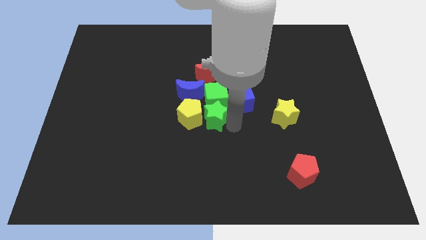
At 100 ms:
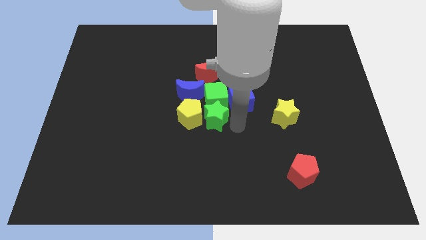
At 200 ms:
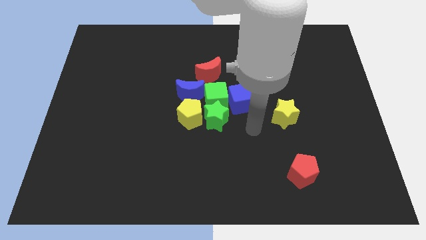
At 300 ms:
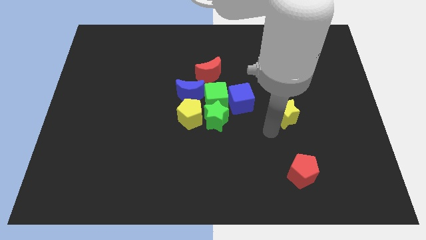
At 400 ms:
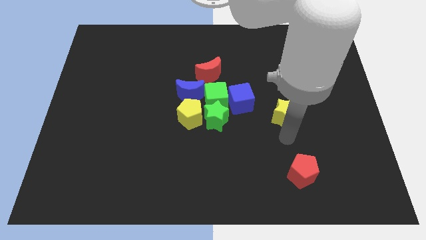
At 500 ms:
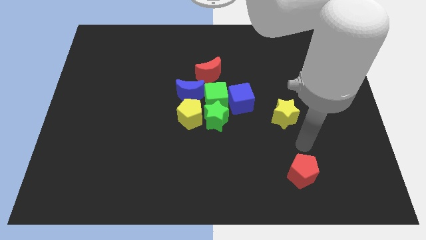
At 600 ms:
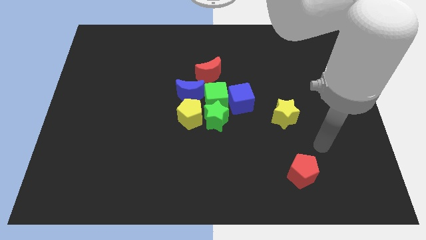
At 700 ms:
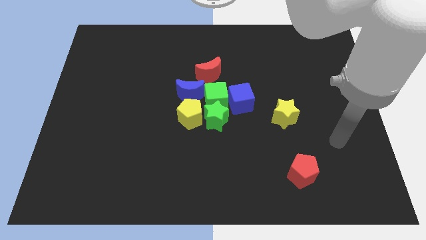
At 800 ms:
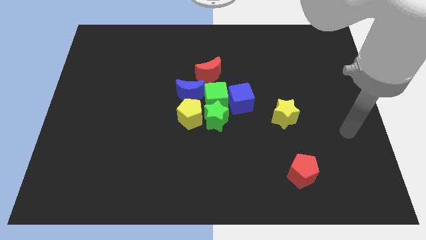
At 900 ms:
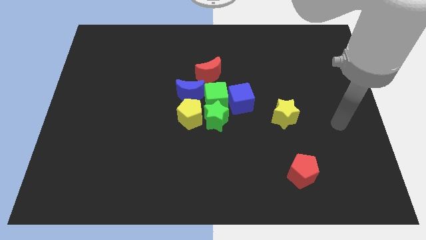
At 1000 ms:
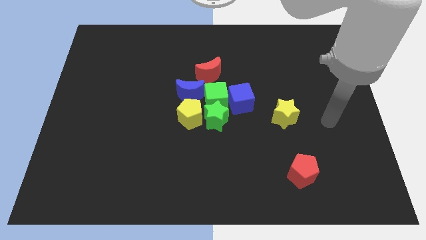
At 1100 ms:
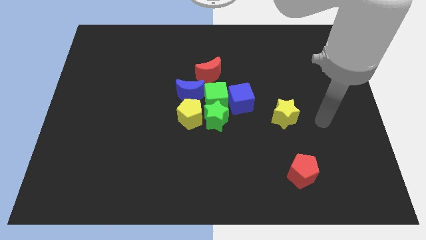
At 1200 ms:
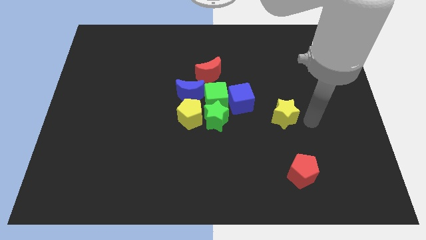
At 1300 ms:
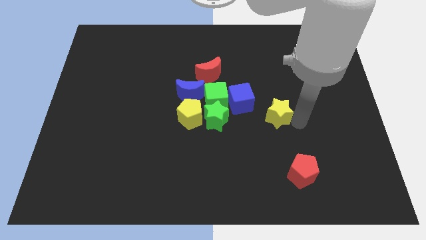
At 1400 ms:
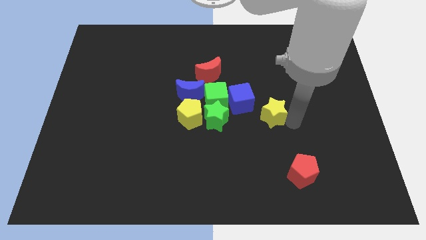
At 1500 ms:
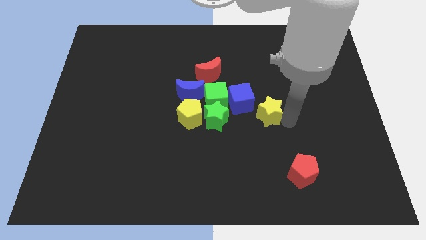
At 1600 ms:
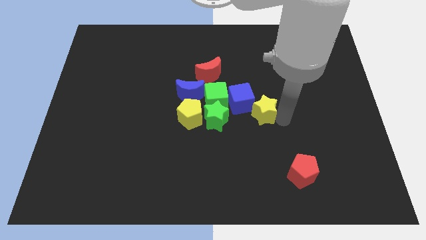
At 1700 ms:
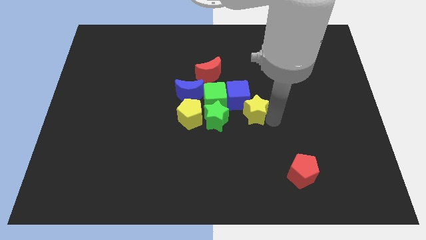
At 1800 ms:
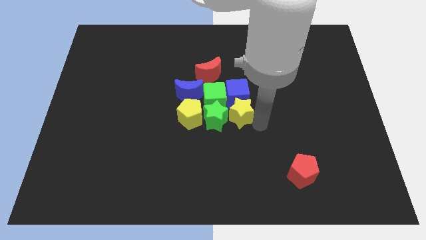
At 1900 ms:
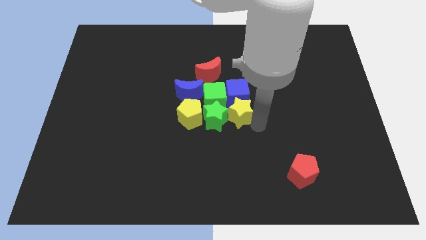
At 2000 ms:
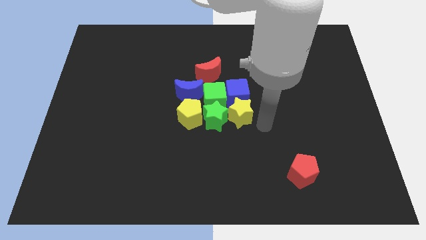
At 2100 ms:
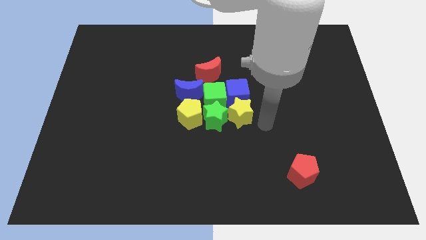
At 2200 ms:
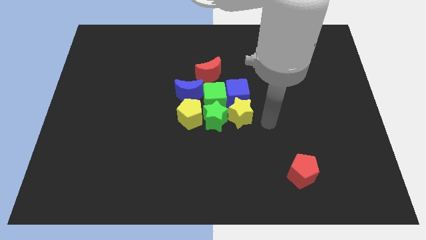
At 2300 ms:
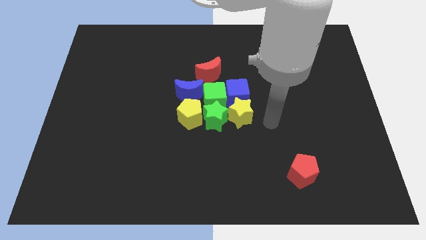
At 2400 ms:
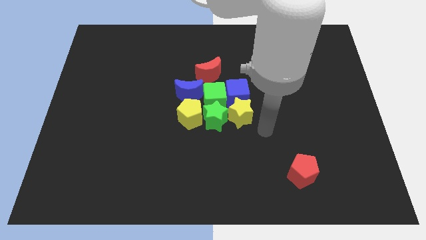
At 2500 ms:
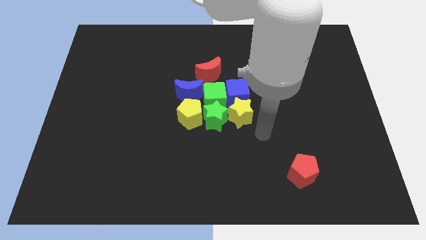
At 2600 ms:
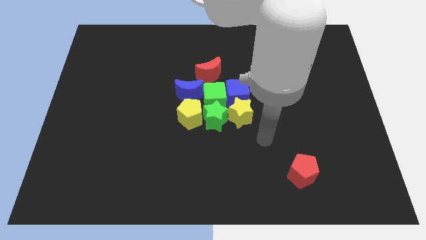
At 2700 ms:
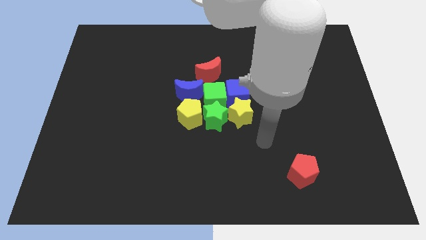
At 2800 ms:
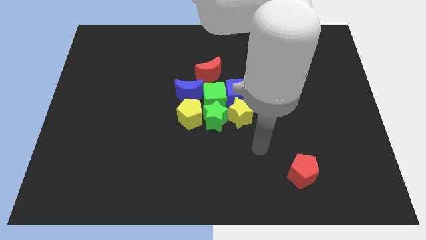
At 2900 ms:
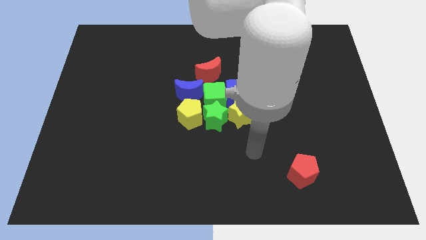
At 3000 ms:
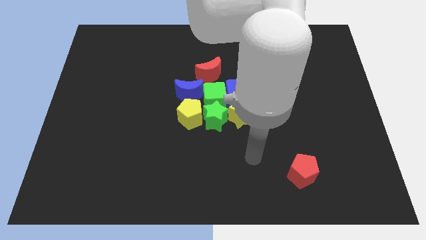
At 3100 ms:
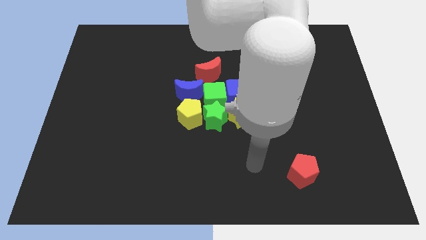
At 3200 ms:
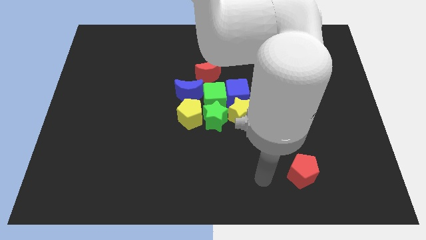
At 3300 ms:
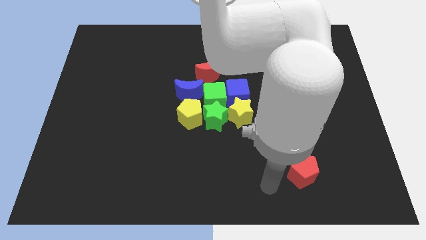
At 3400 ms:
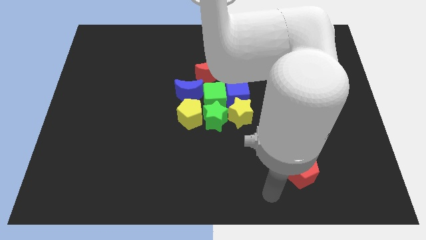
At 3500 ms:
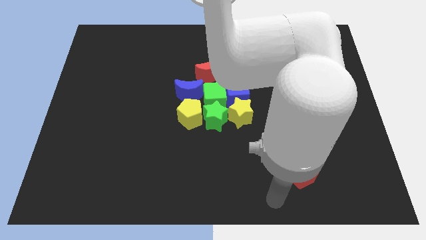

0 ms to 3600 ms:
move the yellow star to the bottom of the blue cube

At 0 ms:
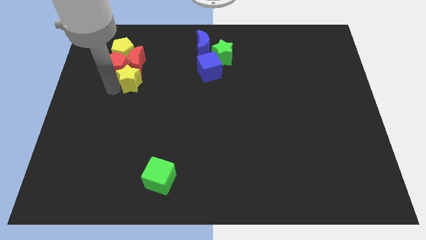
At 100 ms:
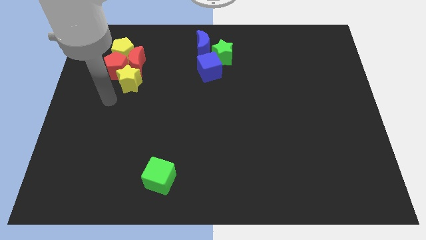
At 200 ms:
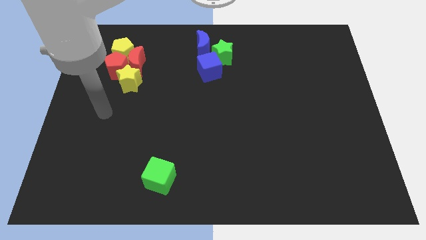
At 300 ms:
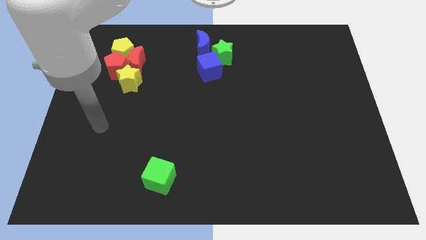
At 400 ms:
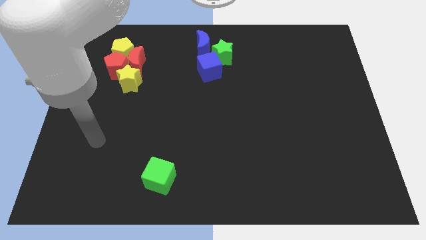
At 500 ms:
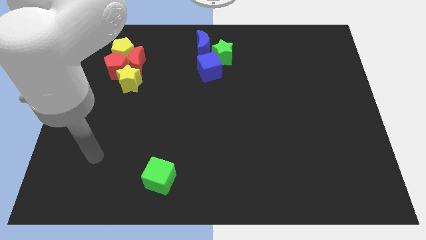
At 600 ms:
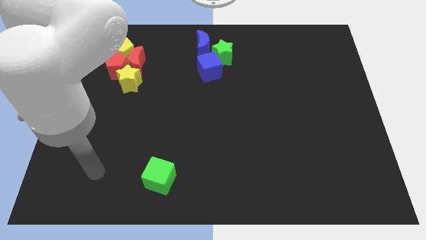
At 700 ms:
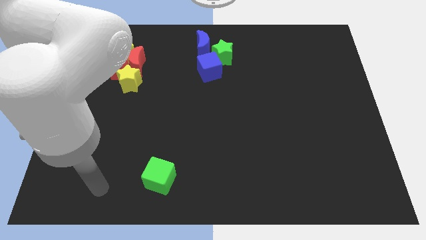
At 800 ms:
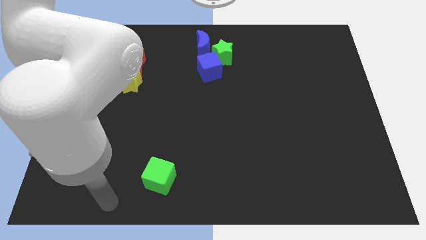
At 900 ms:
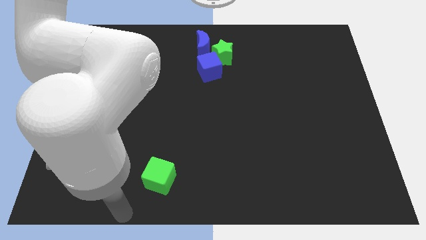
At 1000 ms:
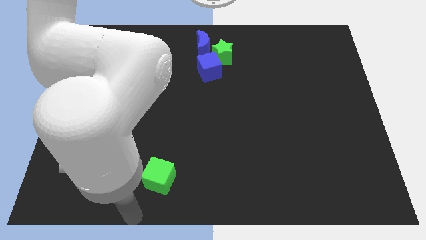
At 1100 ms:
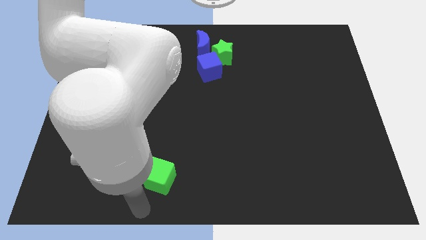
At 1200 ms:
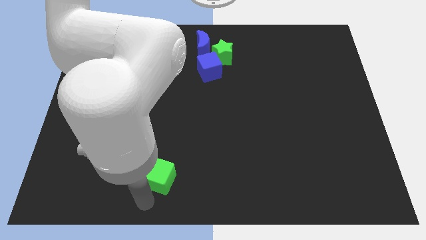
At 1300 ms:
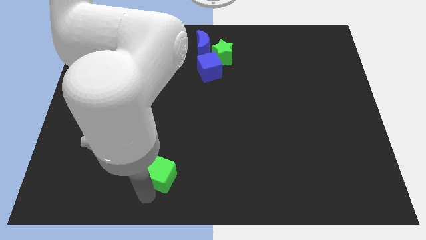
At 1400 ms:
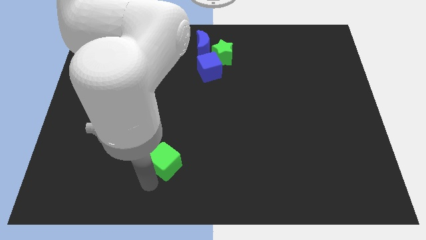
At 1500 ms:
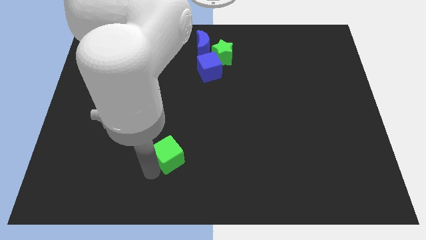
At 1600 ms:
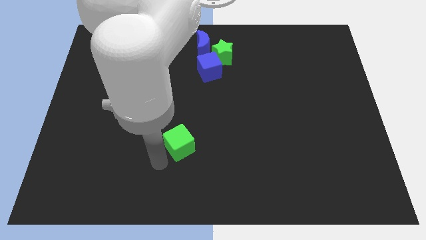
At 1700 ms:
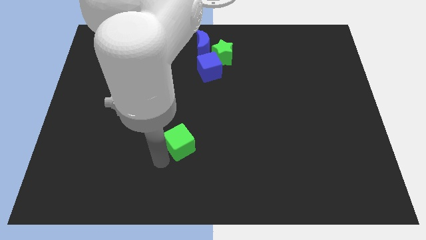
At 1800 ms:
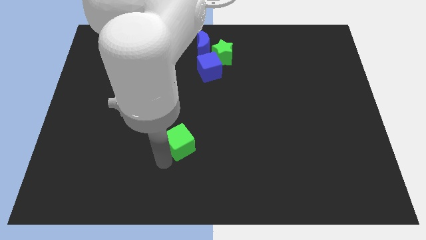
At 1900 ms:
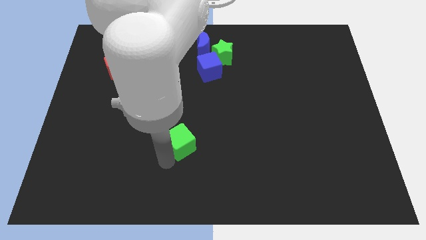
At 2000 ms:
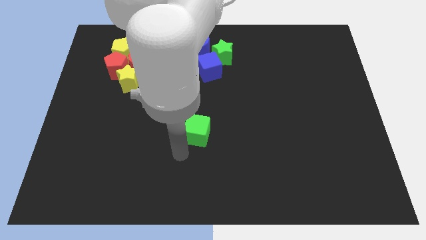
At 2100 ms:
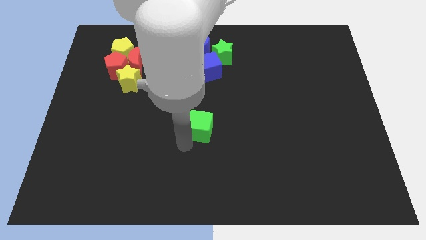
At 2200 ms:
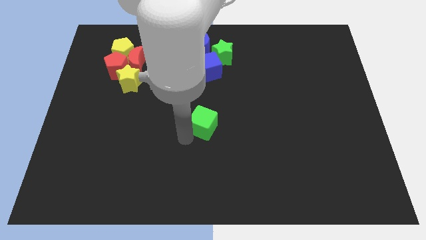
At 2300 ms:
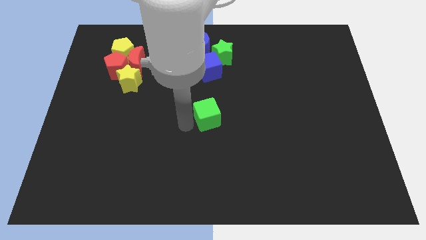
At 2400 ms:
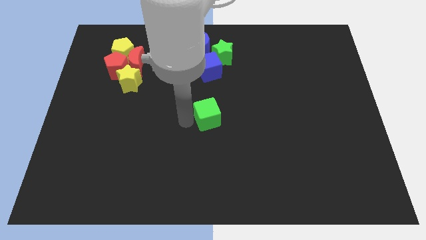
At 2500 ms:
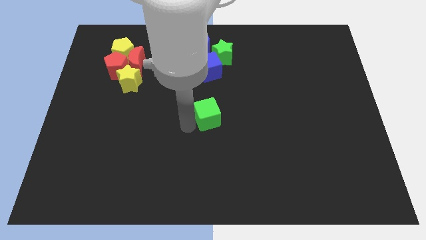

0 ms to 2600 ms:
move the green cube to the center of the board

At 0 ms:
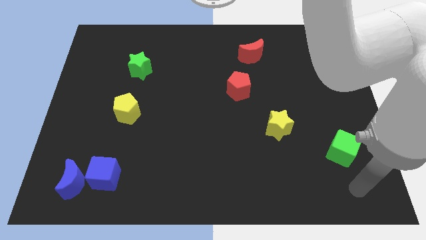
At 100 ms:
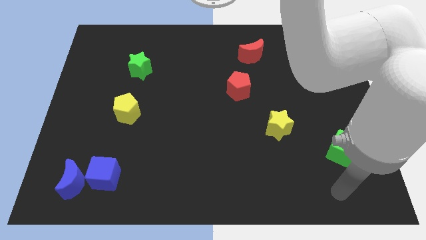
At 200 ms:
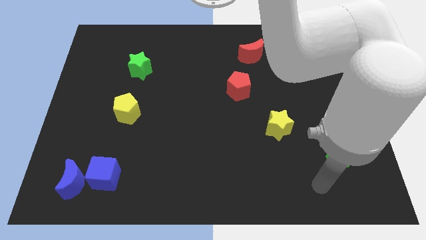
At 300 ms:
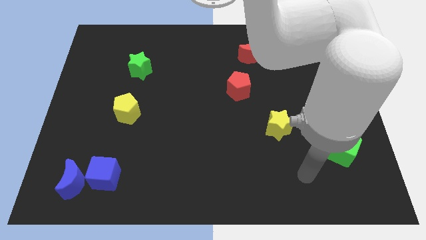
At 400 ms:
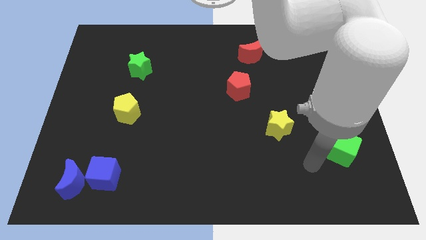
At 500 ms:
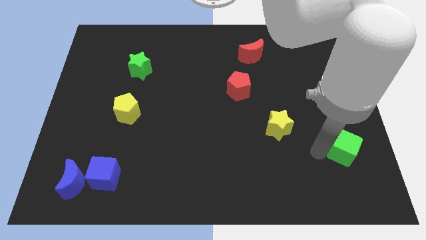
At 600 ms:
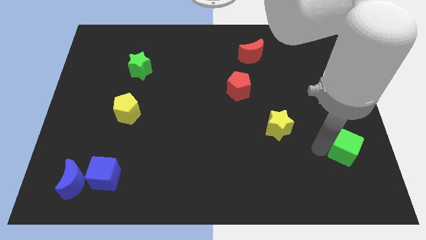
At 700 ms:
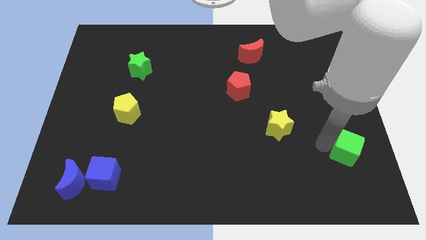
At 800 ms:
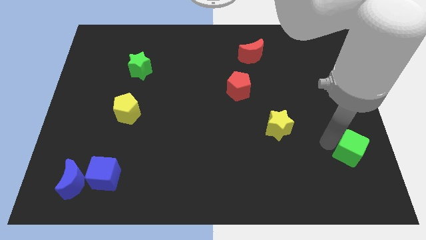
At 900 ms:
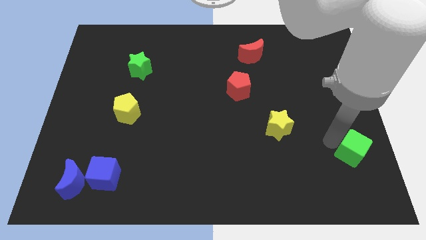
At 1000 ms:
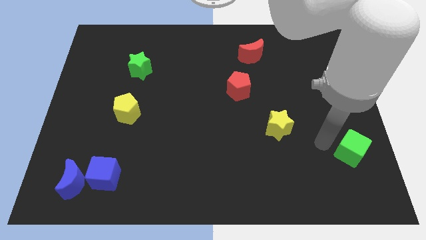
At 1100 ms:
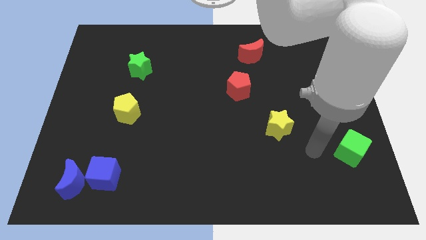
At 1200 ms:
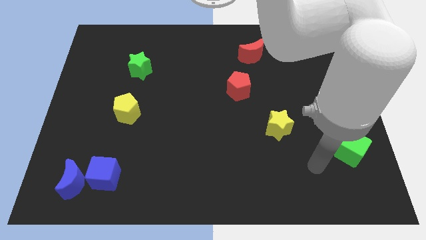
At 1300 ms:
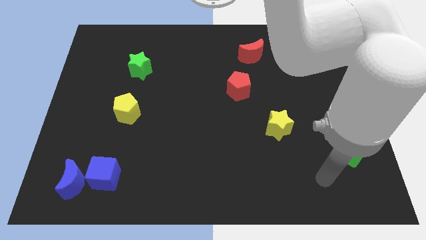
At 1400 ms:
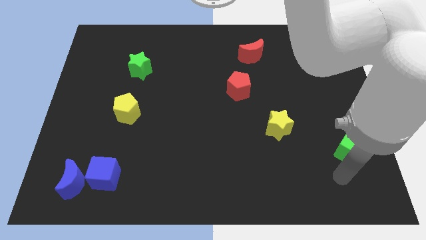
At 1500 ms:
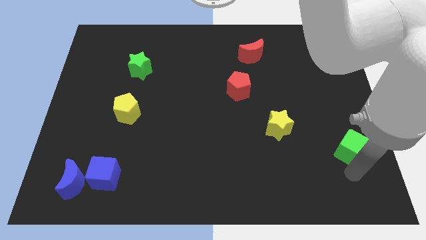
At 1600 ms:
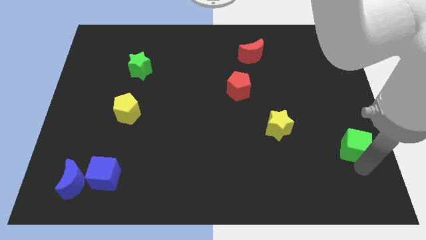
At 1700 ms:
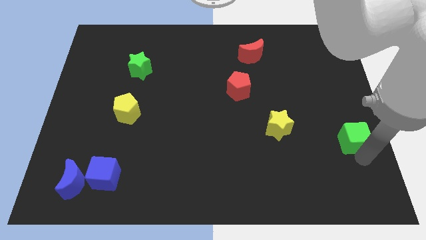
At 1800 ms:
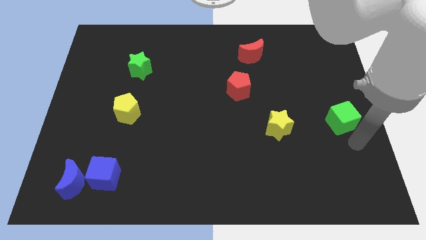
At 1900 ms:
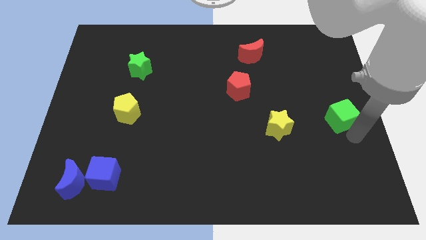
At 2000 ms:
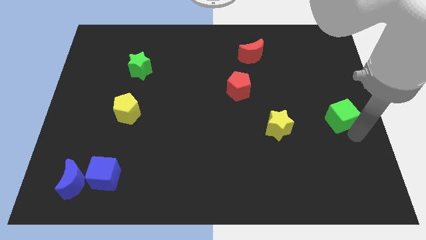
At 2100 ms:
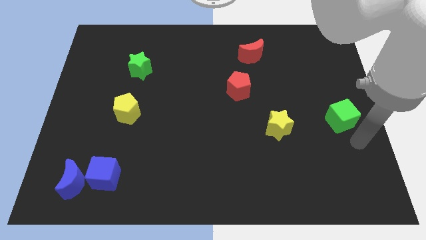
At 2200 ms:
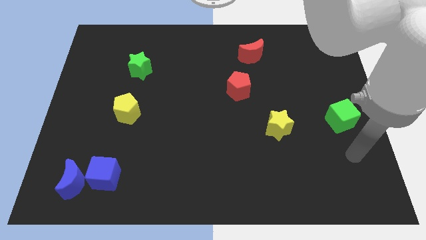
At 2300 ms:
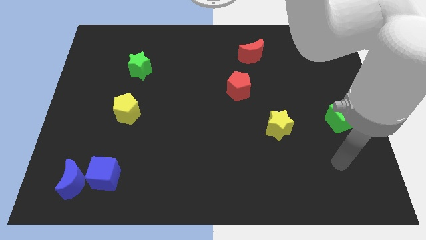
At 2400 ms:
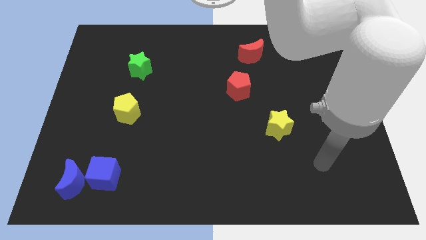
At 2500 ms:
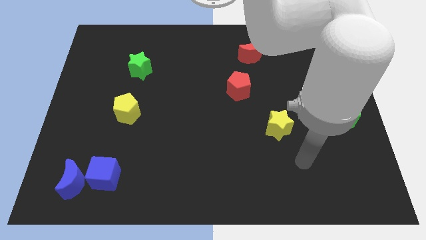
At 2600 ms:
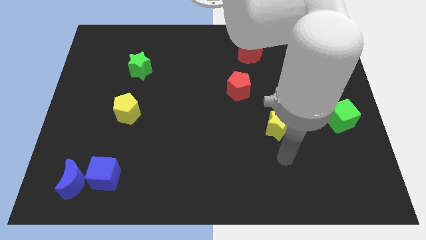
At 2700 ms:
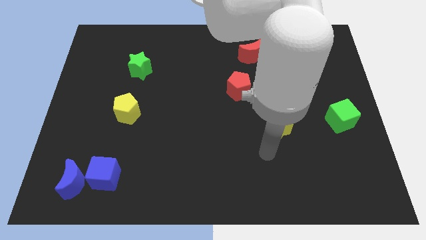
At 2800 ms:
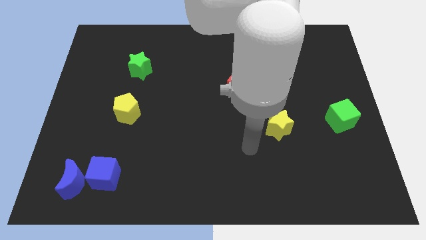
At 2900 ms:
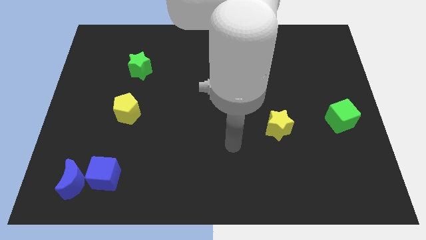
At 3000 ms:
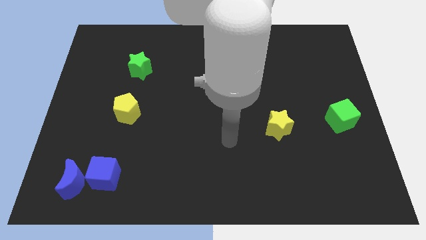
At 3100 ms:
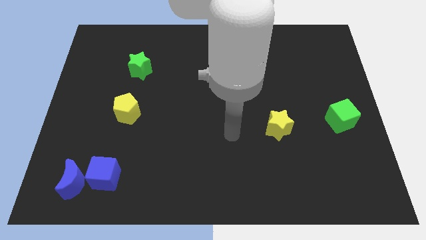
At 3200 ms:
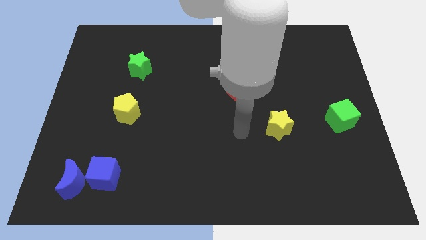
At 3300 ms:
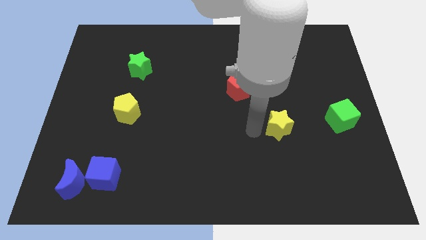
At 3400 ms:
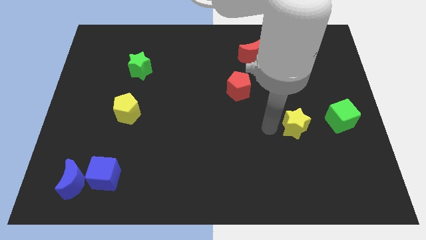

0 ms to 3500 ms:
place the green cube right to the yellow star
